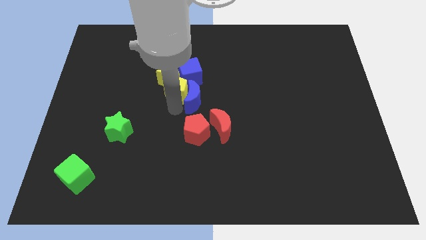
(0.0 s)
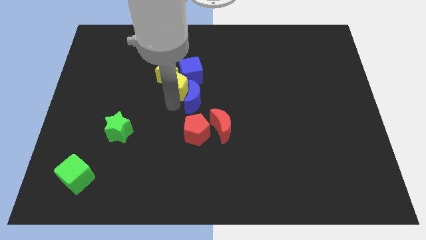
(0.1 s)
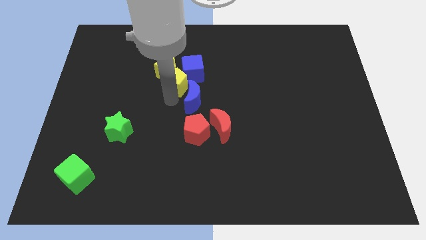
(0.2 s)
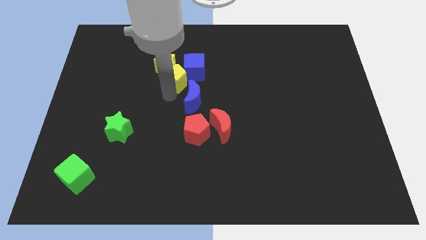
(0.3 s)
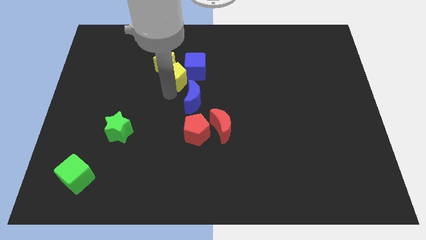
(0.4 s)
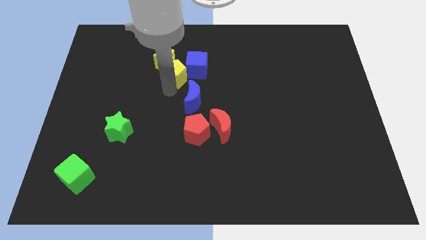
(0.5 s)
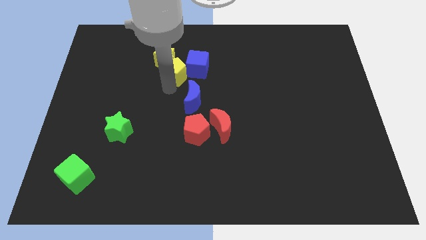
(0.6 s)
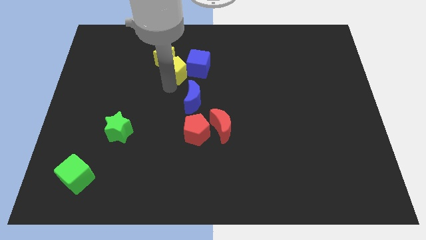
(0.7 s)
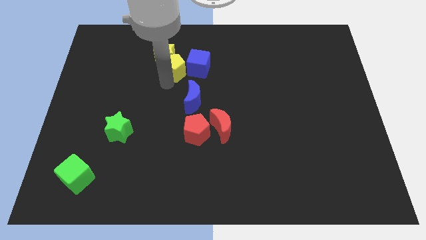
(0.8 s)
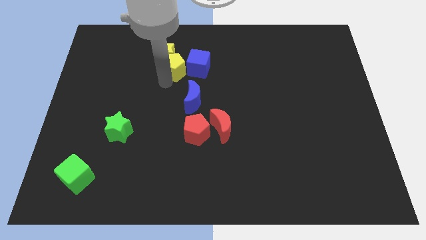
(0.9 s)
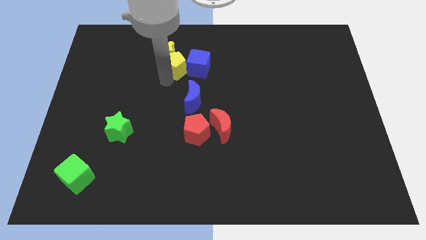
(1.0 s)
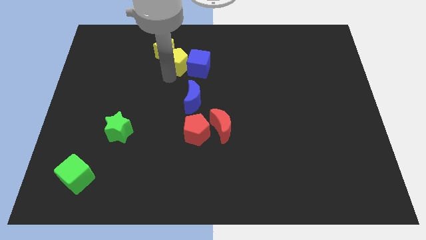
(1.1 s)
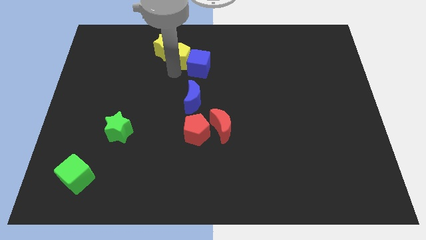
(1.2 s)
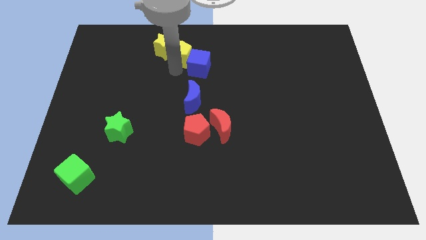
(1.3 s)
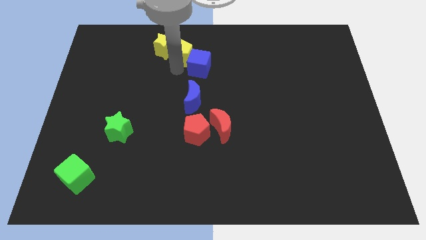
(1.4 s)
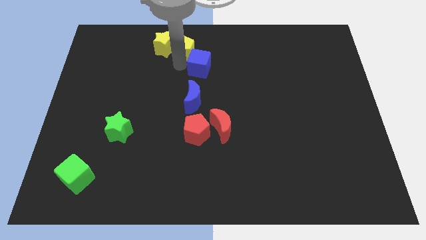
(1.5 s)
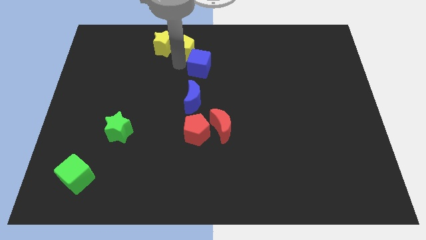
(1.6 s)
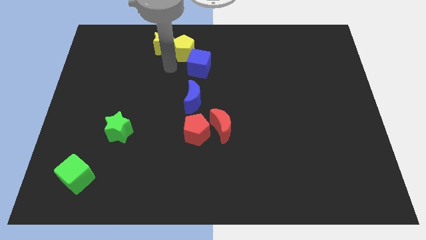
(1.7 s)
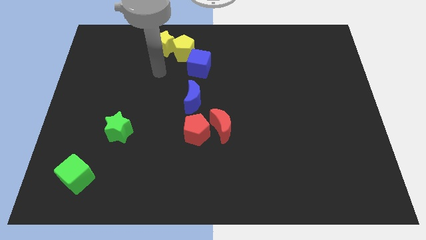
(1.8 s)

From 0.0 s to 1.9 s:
push the yellow pentagon to the right of the yellow star

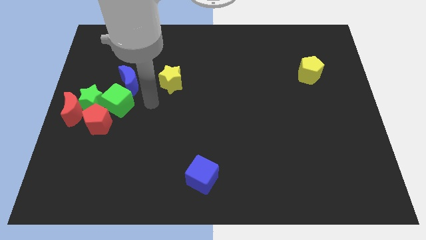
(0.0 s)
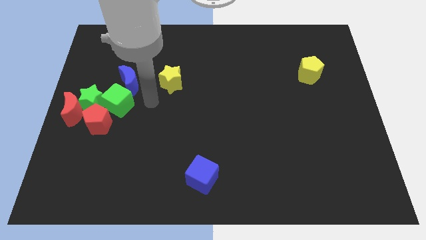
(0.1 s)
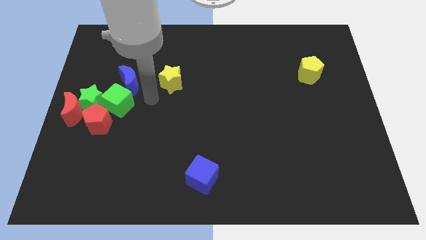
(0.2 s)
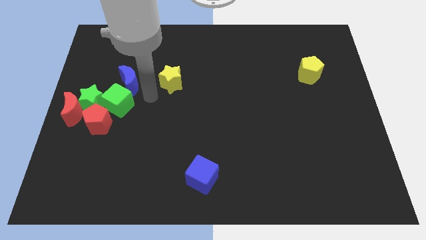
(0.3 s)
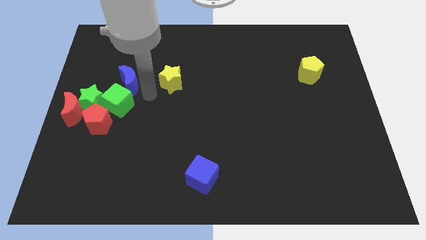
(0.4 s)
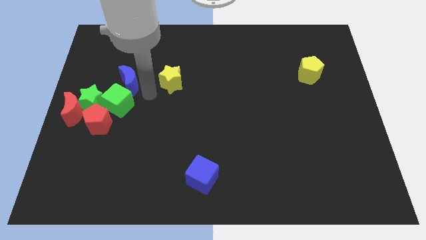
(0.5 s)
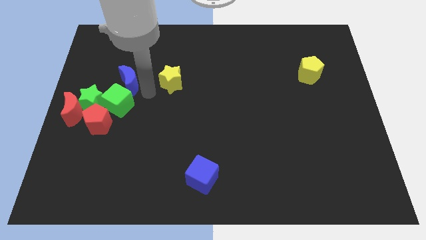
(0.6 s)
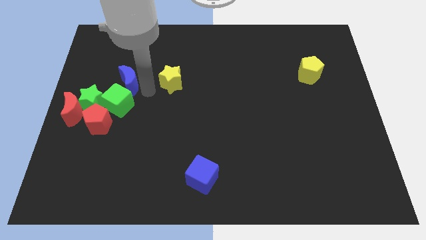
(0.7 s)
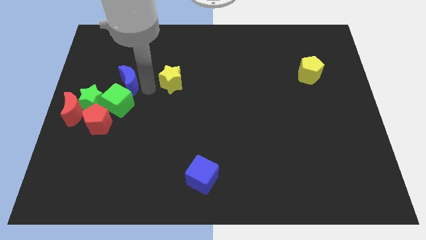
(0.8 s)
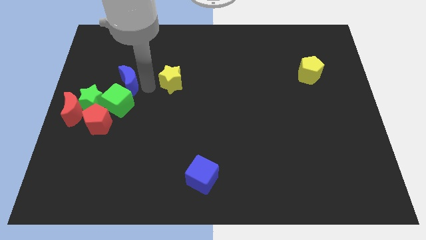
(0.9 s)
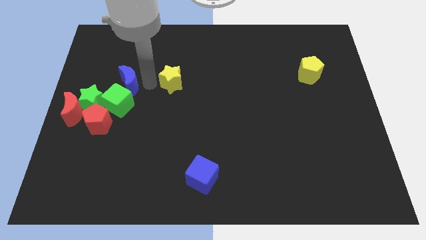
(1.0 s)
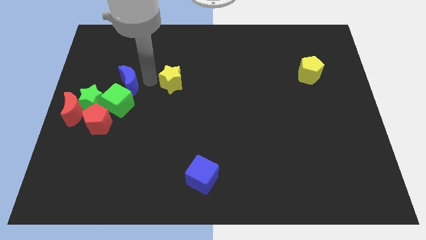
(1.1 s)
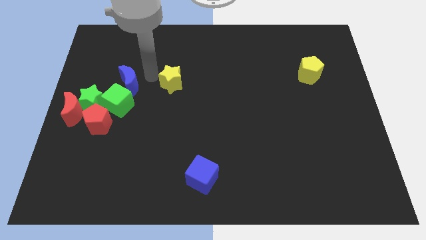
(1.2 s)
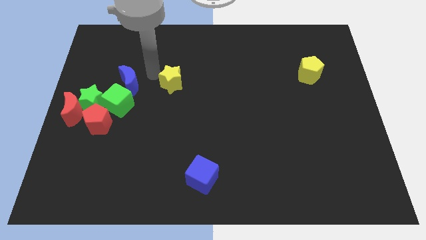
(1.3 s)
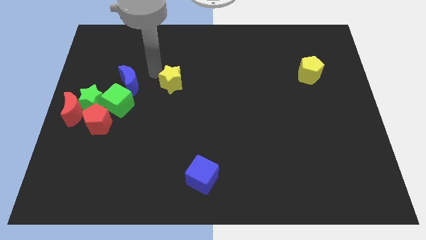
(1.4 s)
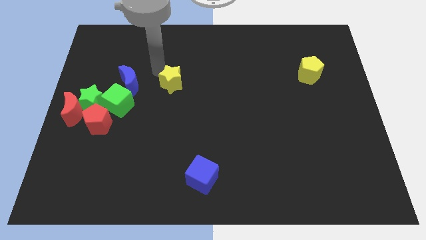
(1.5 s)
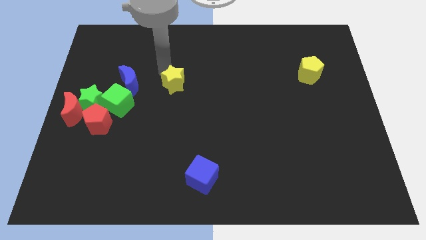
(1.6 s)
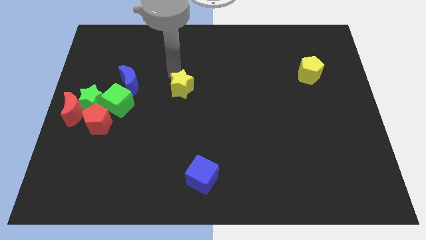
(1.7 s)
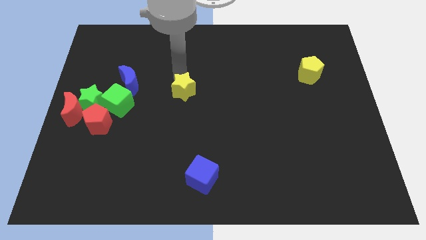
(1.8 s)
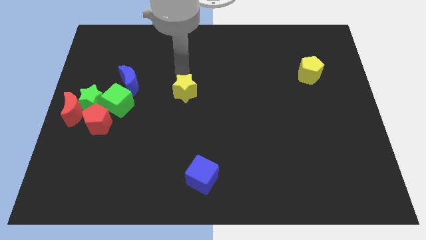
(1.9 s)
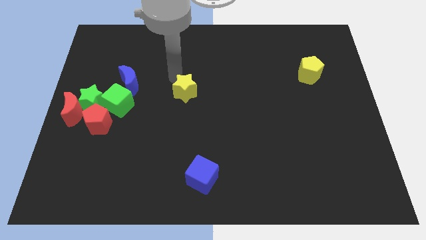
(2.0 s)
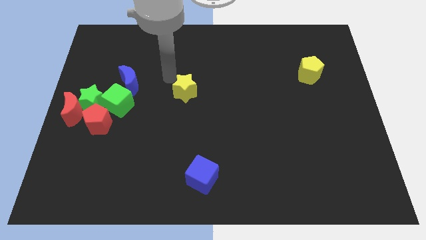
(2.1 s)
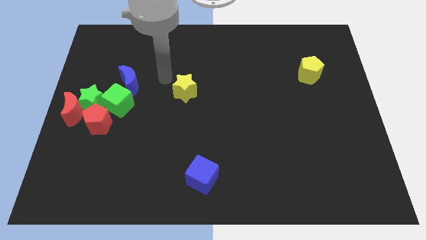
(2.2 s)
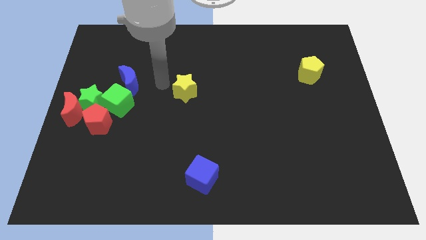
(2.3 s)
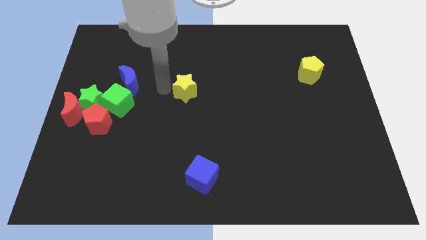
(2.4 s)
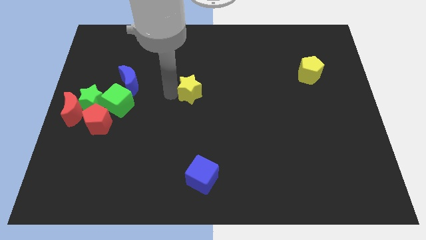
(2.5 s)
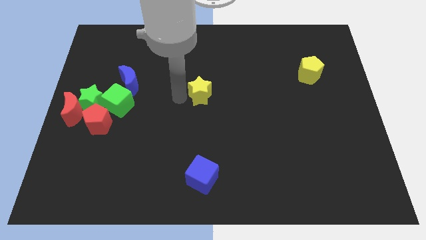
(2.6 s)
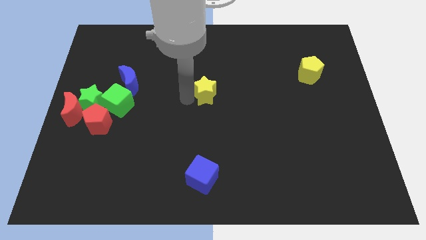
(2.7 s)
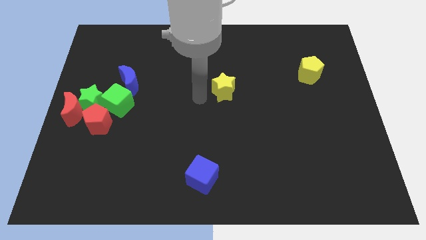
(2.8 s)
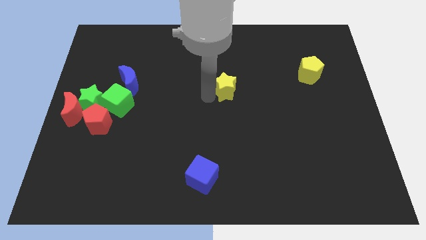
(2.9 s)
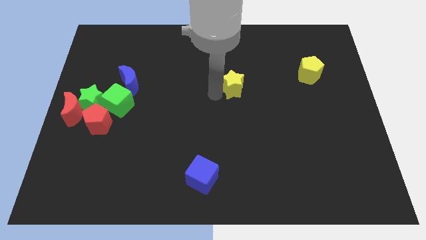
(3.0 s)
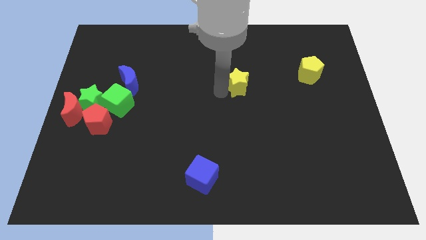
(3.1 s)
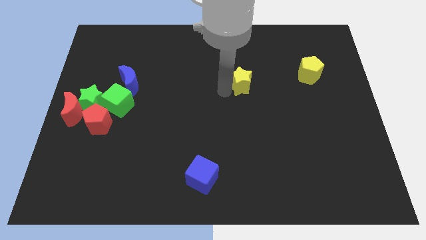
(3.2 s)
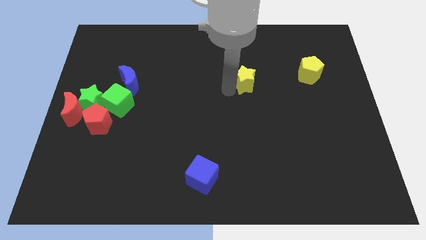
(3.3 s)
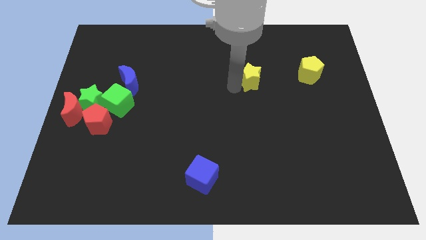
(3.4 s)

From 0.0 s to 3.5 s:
move the yellow star towards the yellow pentagon

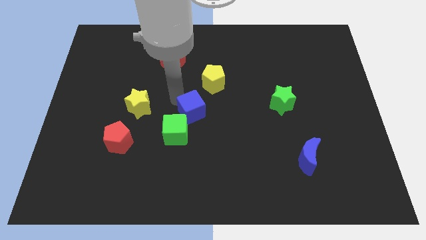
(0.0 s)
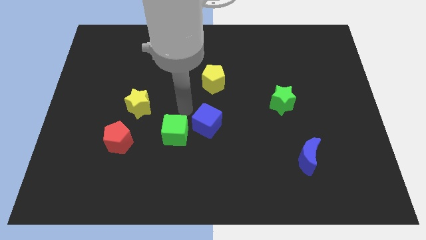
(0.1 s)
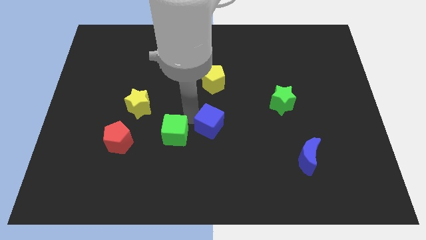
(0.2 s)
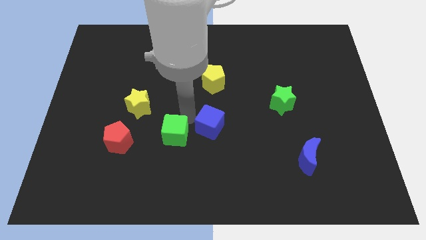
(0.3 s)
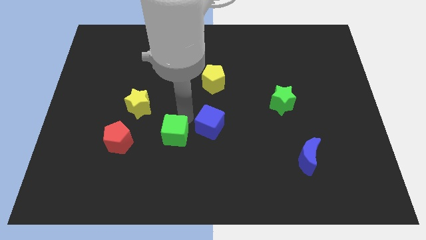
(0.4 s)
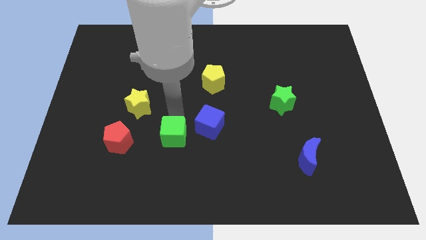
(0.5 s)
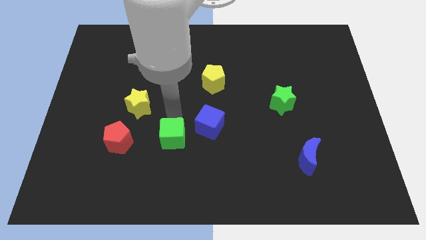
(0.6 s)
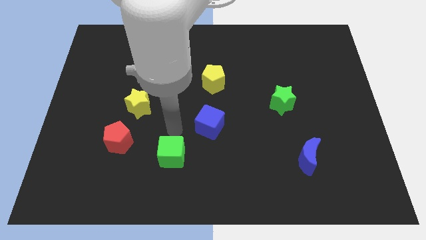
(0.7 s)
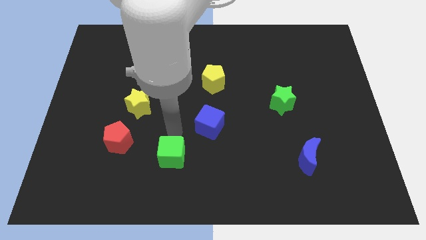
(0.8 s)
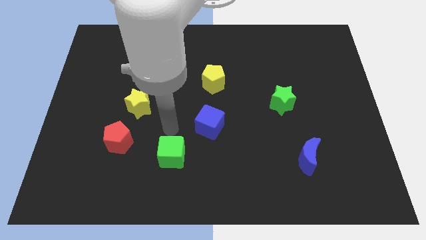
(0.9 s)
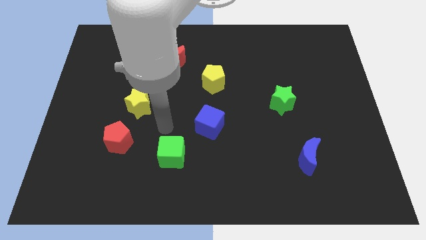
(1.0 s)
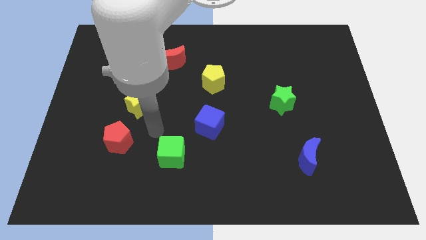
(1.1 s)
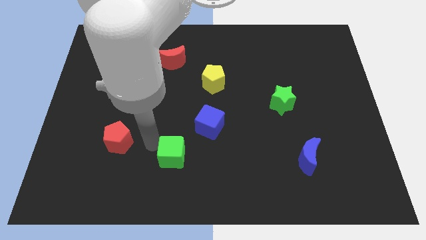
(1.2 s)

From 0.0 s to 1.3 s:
push blue cube green cube slightly to the center

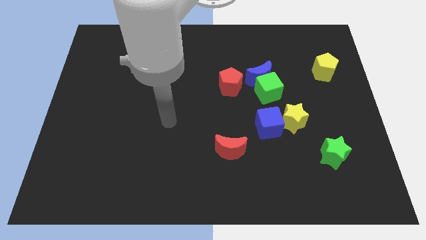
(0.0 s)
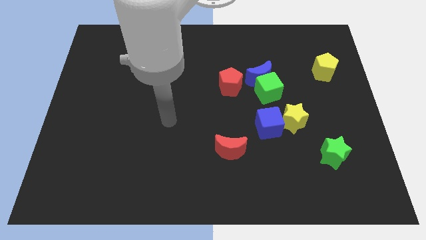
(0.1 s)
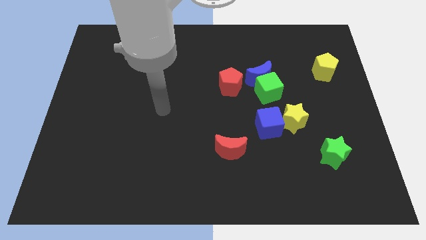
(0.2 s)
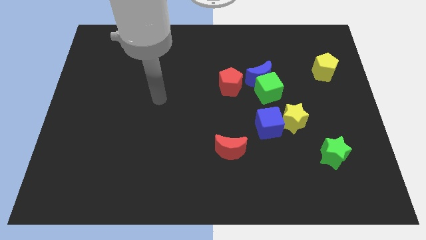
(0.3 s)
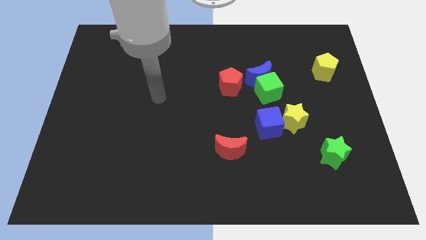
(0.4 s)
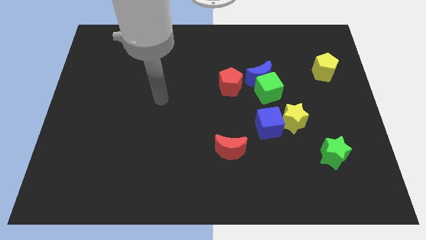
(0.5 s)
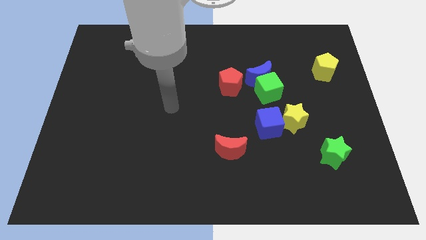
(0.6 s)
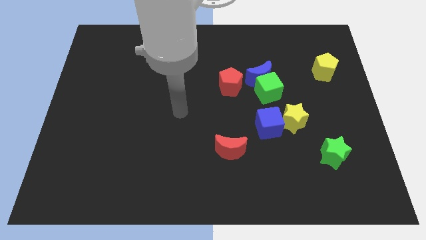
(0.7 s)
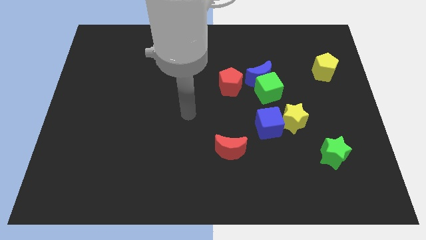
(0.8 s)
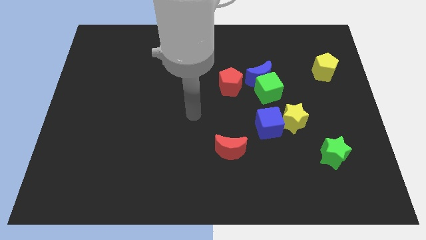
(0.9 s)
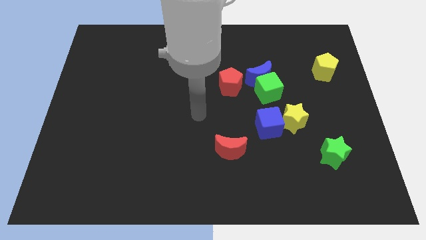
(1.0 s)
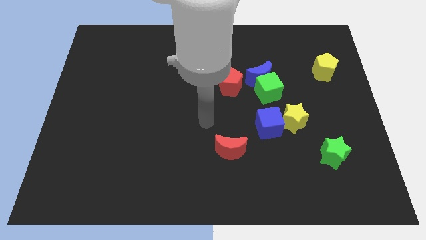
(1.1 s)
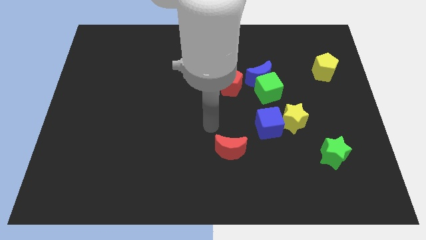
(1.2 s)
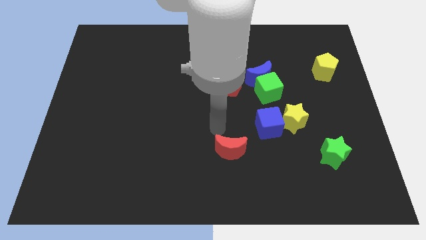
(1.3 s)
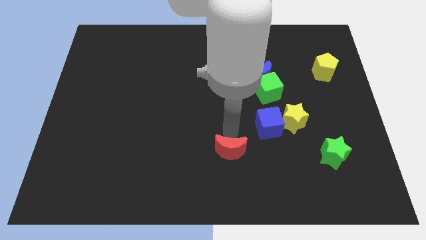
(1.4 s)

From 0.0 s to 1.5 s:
point your arm above the red moon

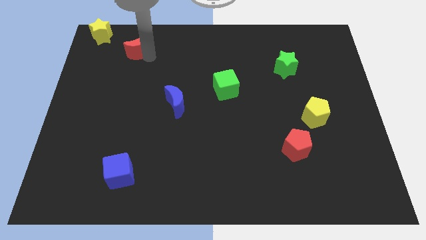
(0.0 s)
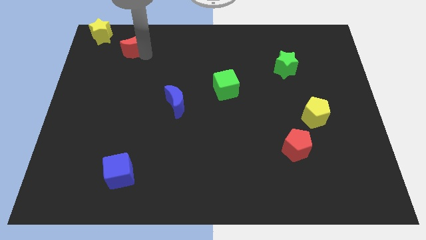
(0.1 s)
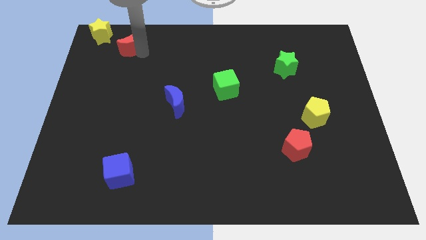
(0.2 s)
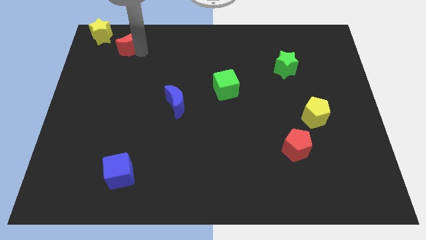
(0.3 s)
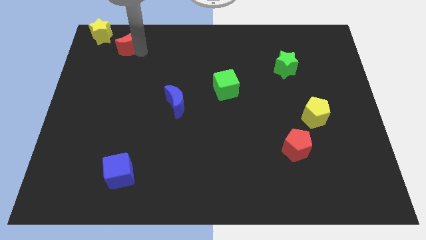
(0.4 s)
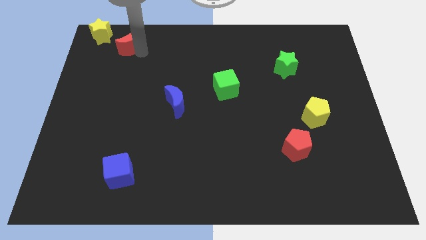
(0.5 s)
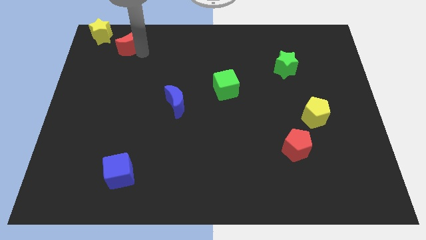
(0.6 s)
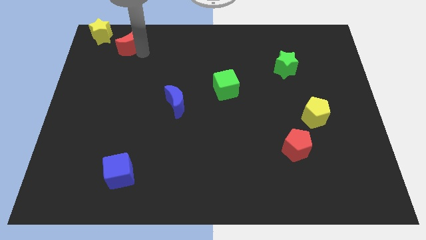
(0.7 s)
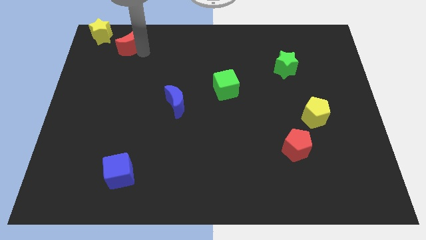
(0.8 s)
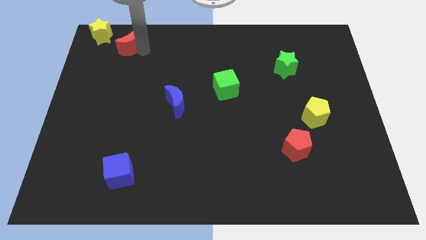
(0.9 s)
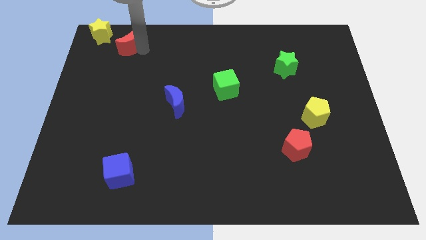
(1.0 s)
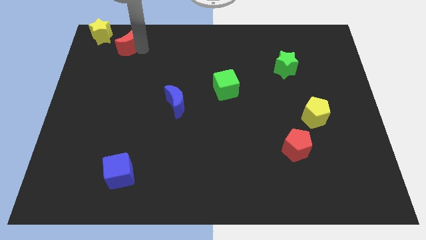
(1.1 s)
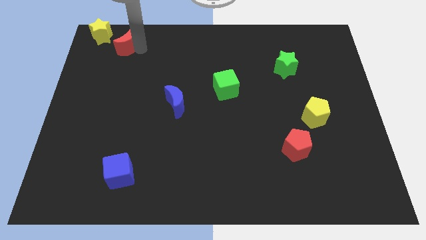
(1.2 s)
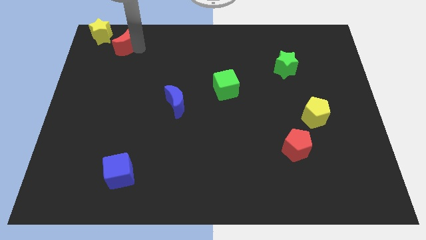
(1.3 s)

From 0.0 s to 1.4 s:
move the red pentagon towards the yellow star
